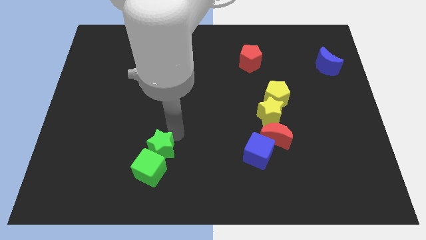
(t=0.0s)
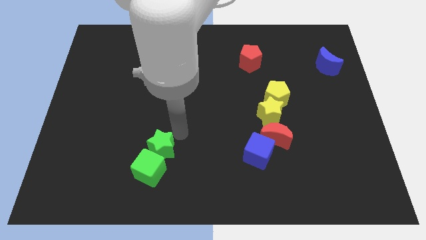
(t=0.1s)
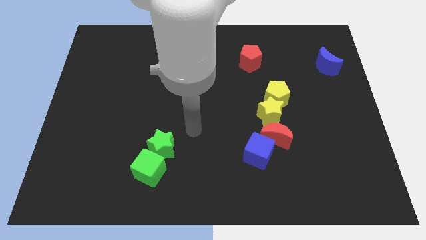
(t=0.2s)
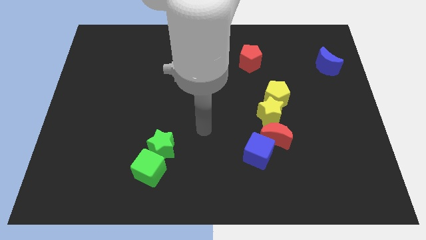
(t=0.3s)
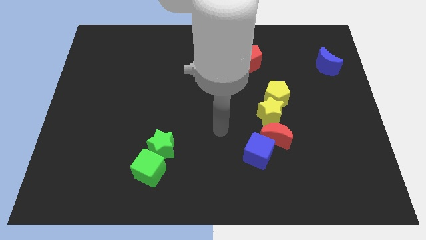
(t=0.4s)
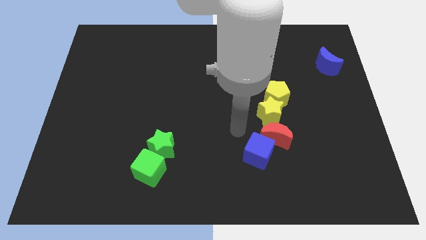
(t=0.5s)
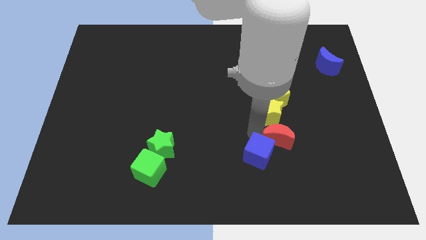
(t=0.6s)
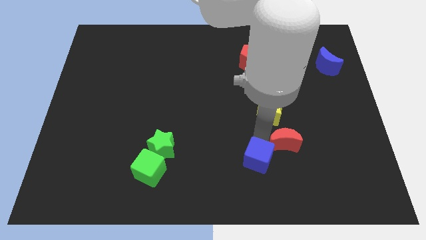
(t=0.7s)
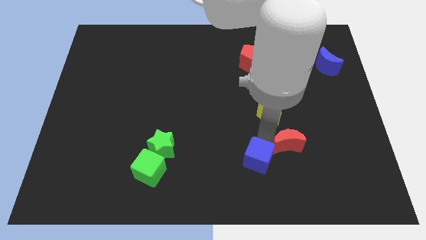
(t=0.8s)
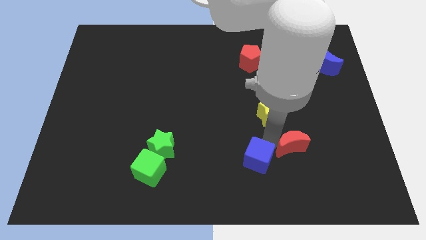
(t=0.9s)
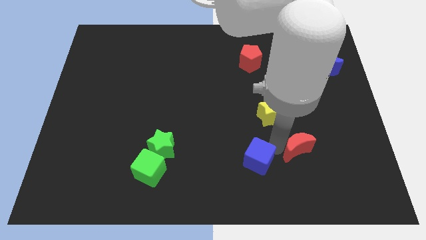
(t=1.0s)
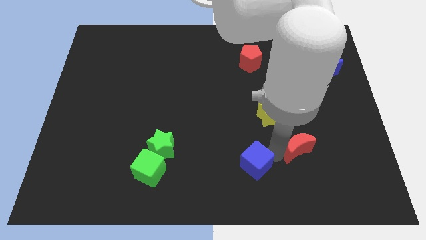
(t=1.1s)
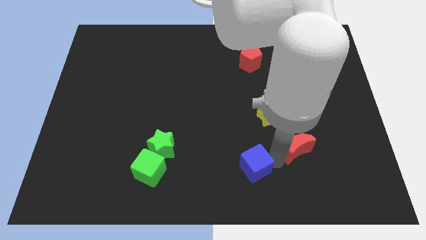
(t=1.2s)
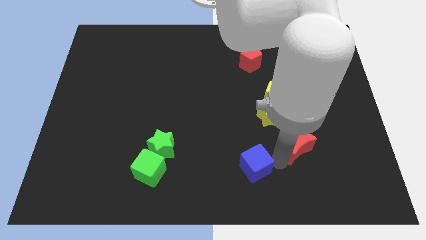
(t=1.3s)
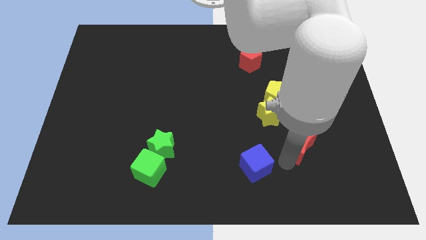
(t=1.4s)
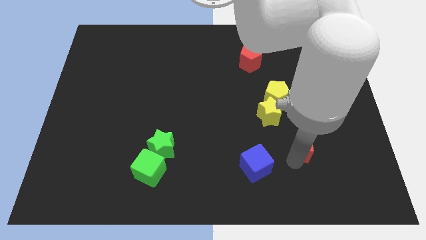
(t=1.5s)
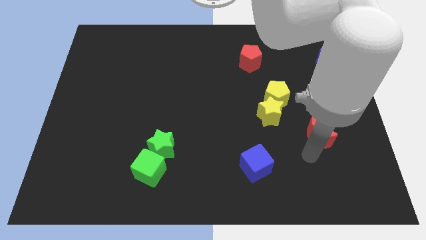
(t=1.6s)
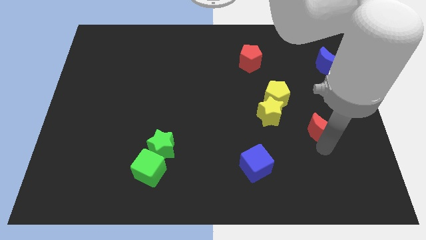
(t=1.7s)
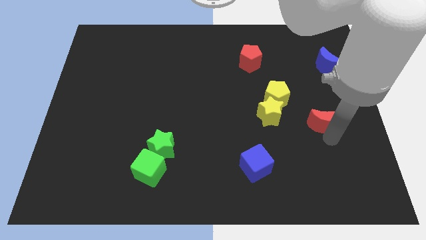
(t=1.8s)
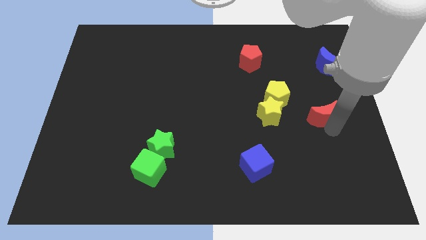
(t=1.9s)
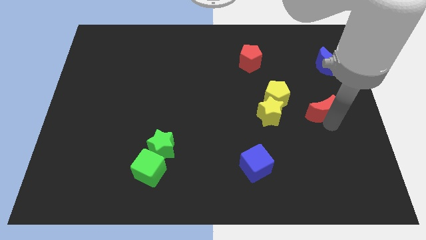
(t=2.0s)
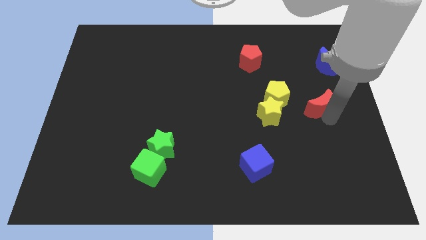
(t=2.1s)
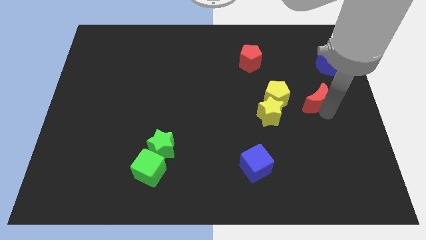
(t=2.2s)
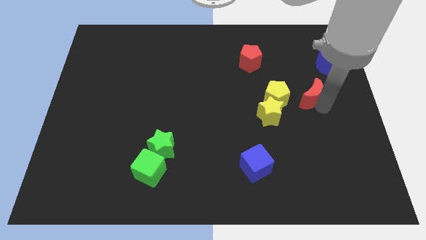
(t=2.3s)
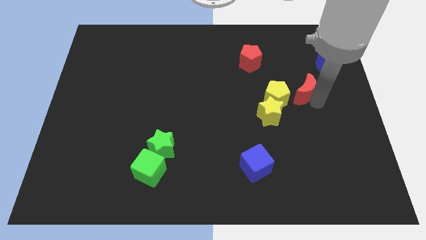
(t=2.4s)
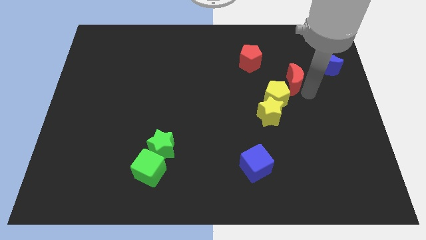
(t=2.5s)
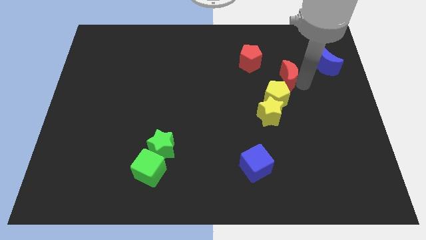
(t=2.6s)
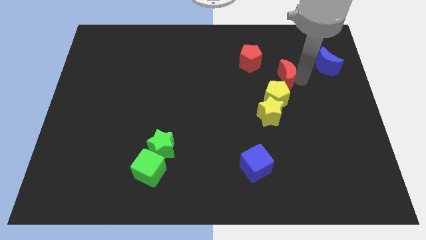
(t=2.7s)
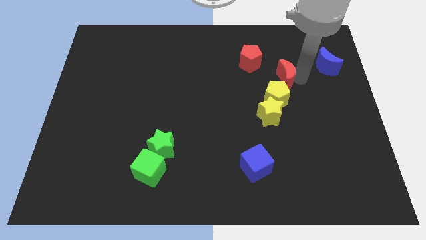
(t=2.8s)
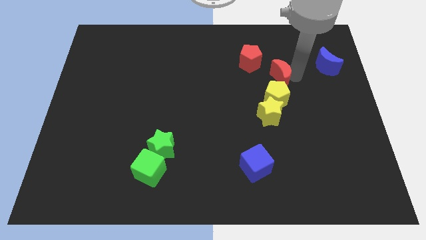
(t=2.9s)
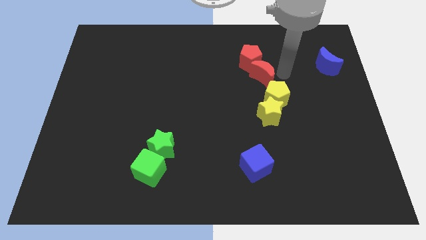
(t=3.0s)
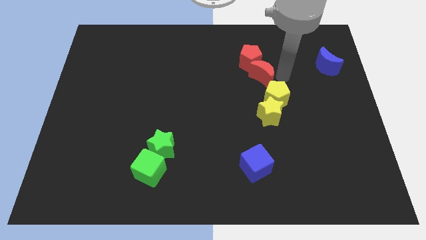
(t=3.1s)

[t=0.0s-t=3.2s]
separate red moon from yellow star and blue cube

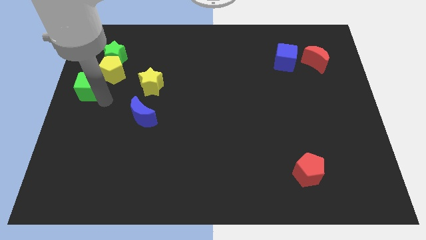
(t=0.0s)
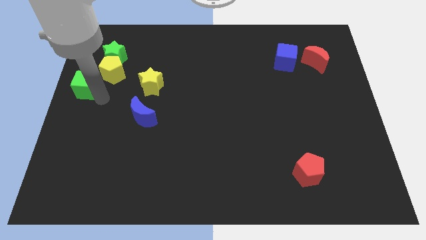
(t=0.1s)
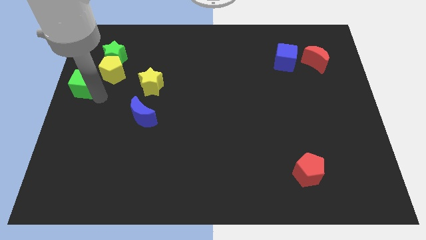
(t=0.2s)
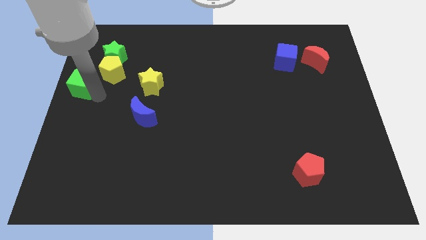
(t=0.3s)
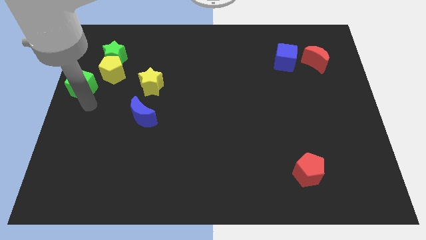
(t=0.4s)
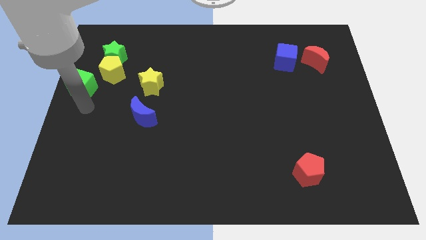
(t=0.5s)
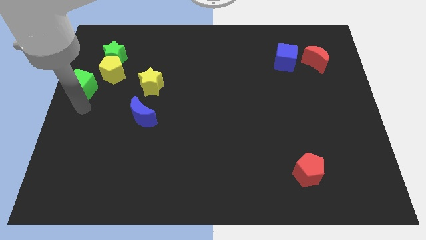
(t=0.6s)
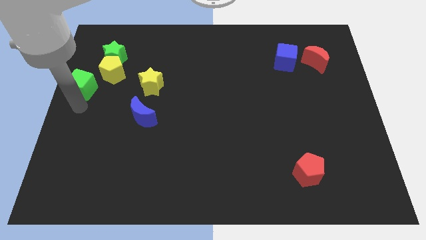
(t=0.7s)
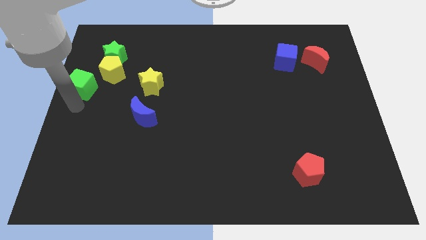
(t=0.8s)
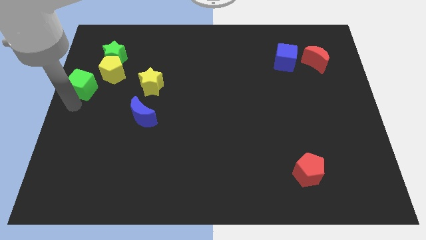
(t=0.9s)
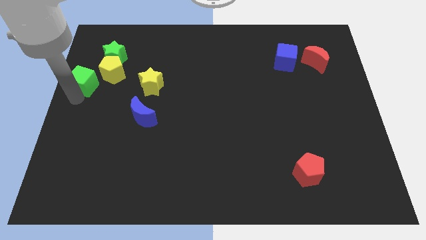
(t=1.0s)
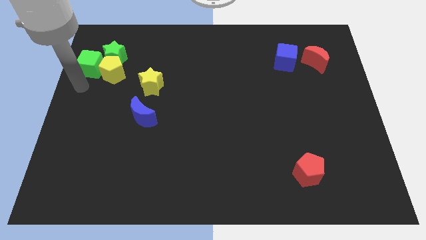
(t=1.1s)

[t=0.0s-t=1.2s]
slide the green cube to the left of the yellow pentagon

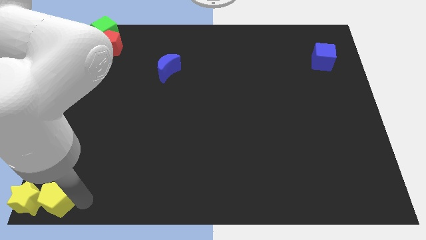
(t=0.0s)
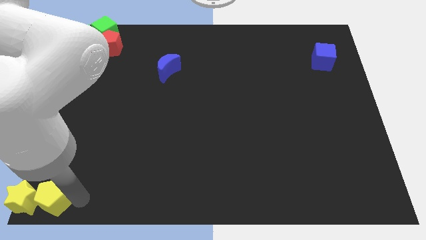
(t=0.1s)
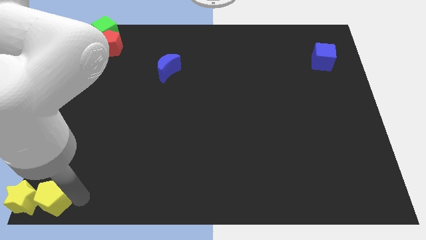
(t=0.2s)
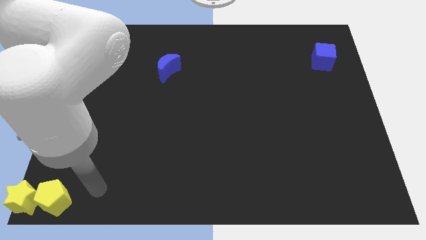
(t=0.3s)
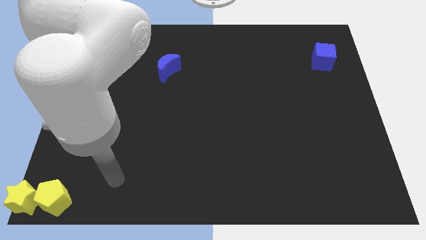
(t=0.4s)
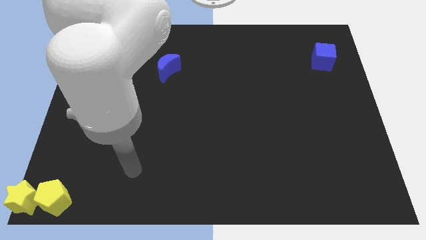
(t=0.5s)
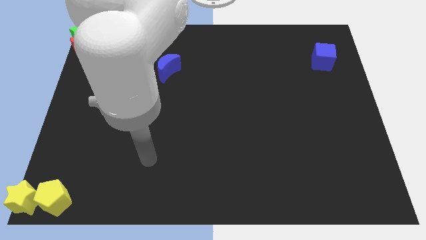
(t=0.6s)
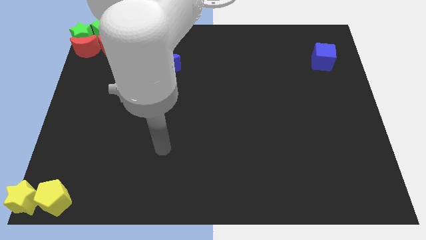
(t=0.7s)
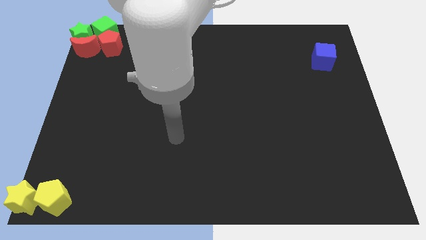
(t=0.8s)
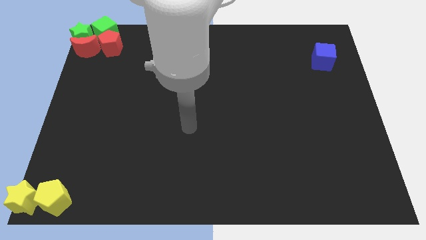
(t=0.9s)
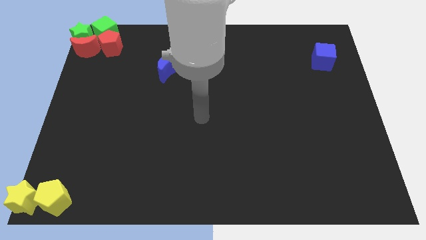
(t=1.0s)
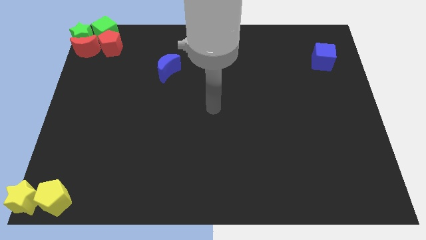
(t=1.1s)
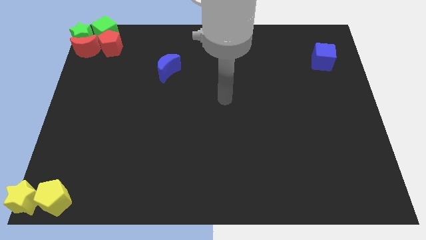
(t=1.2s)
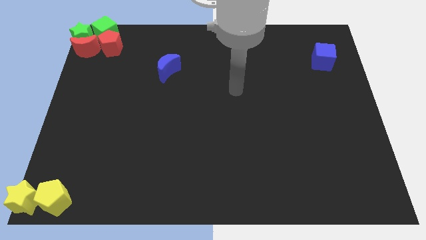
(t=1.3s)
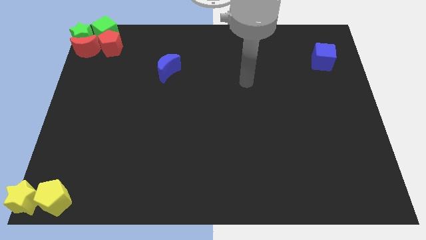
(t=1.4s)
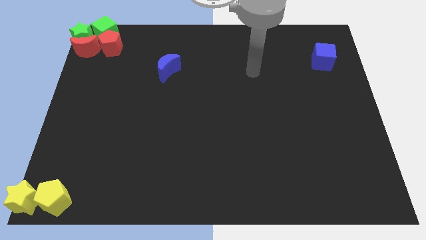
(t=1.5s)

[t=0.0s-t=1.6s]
move the arm away from the yellow pentagon

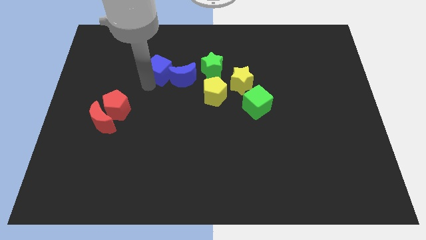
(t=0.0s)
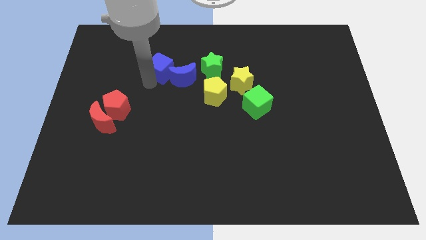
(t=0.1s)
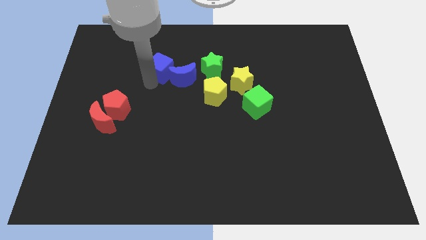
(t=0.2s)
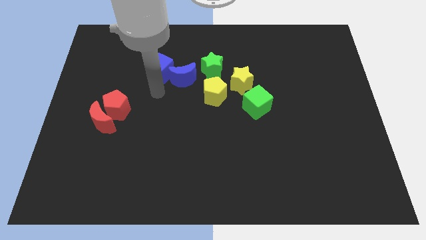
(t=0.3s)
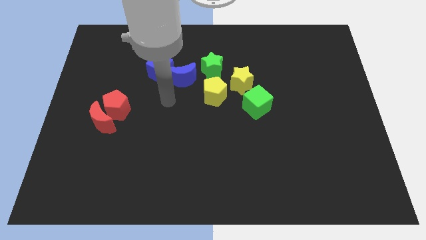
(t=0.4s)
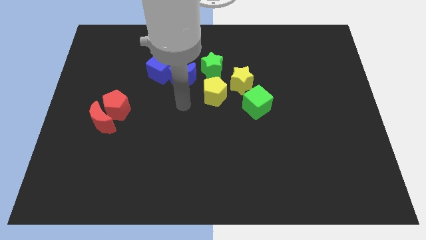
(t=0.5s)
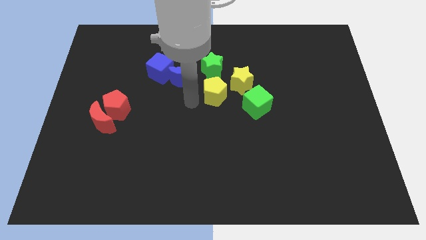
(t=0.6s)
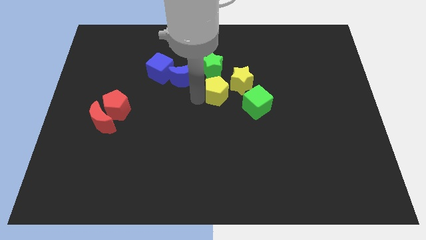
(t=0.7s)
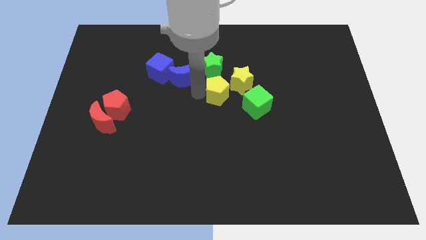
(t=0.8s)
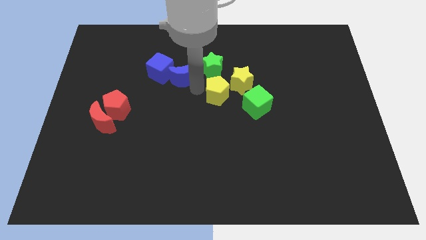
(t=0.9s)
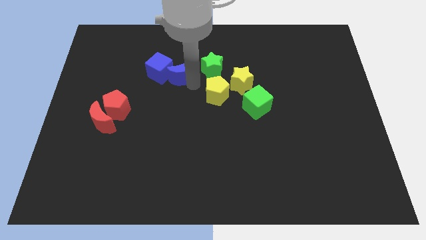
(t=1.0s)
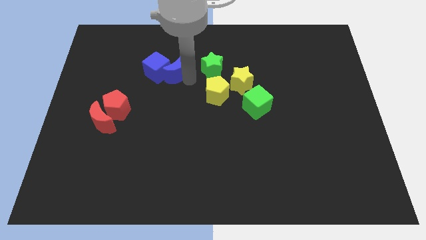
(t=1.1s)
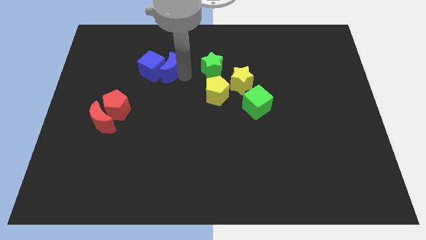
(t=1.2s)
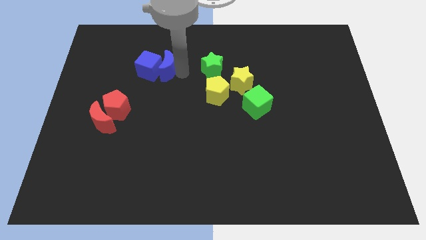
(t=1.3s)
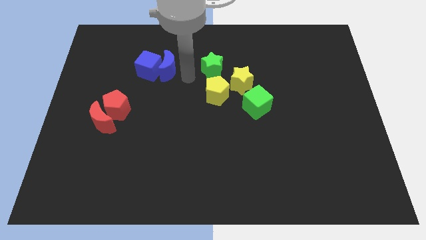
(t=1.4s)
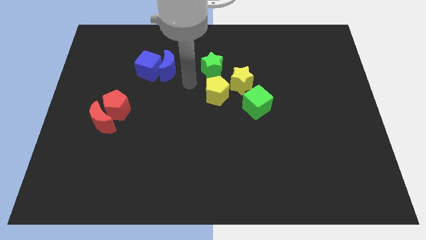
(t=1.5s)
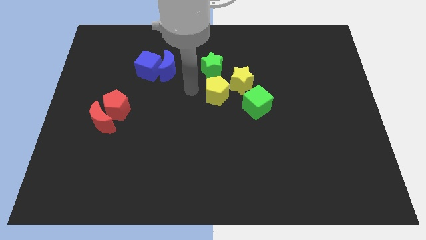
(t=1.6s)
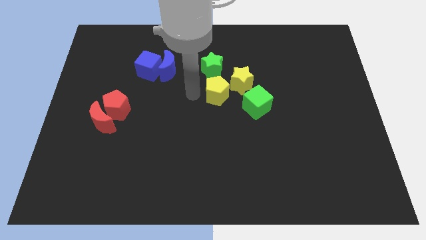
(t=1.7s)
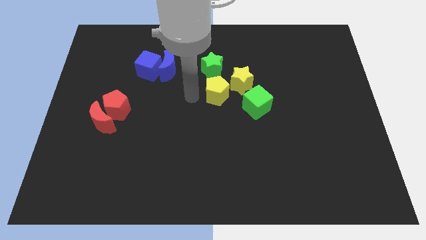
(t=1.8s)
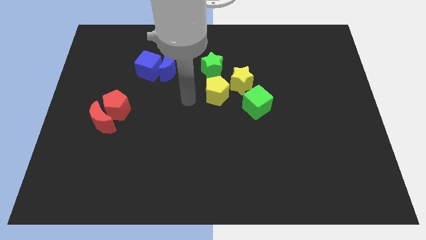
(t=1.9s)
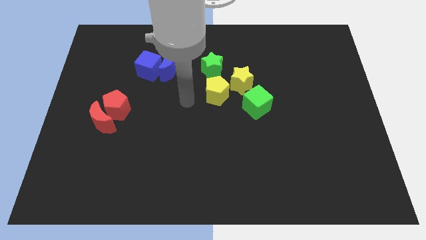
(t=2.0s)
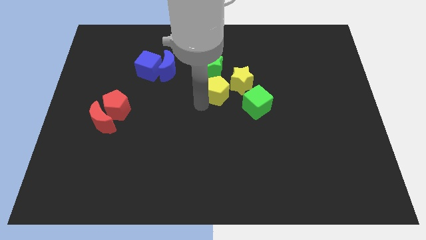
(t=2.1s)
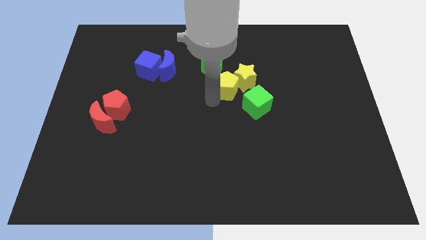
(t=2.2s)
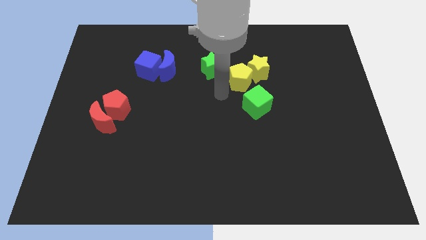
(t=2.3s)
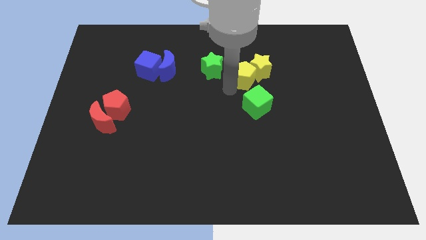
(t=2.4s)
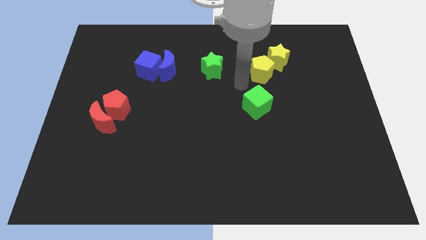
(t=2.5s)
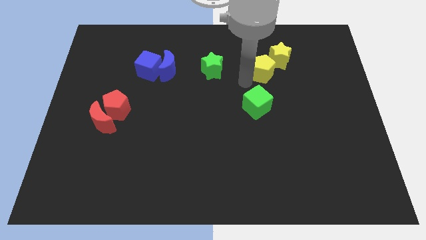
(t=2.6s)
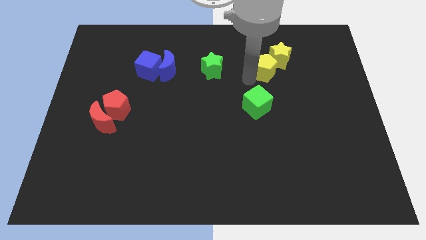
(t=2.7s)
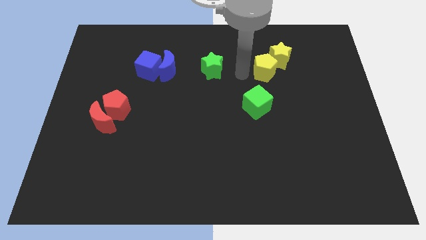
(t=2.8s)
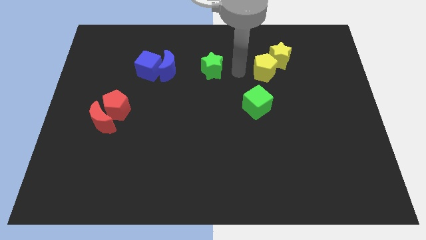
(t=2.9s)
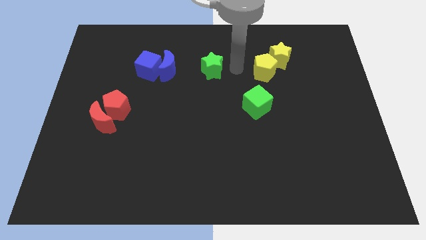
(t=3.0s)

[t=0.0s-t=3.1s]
slightly move the blue blocks to the right
